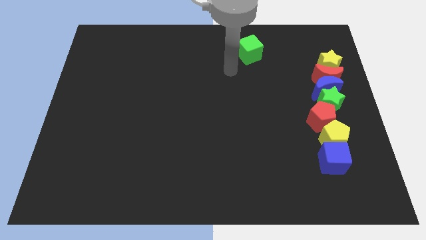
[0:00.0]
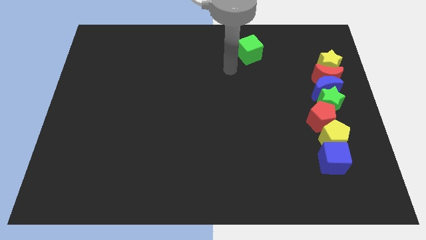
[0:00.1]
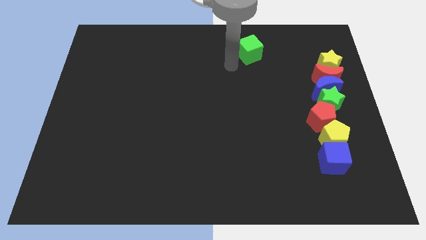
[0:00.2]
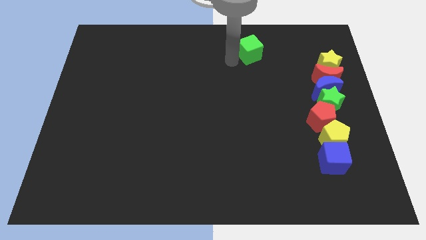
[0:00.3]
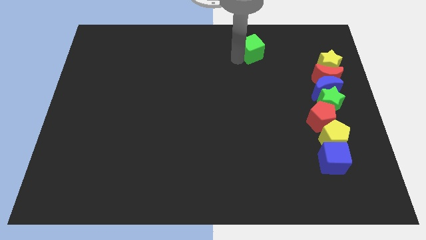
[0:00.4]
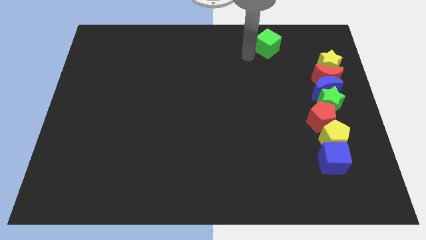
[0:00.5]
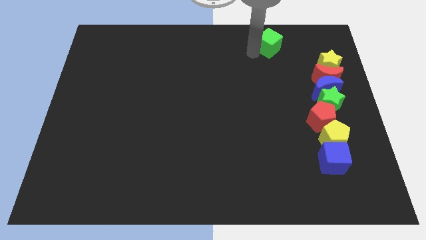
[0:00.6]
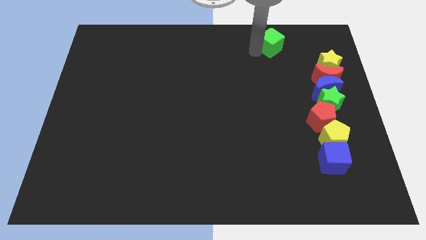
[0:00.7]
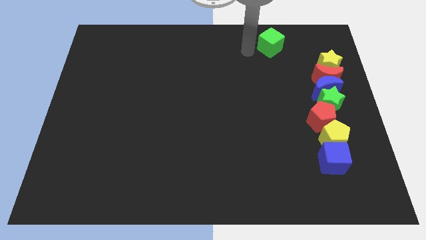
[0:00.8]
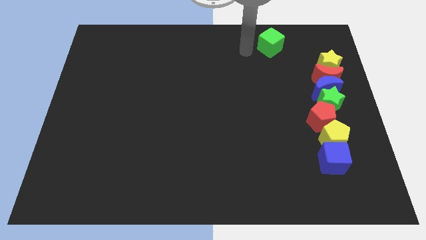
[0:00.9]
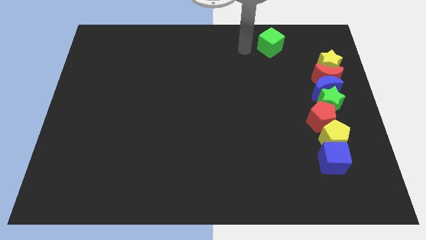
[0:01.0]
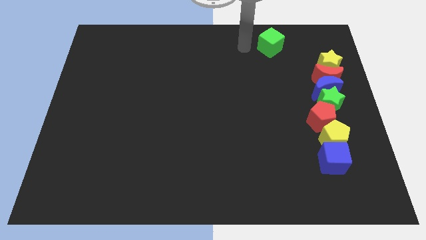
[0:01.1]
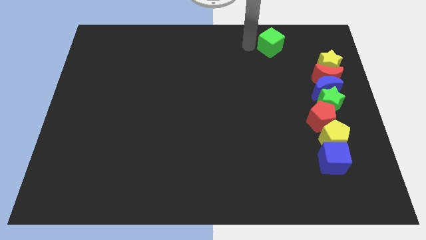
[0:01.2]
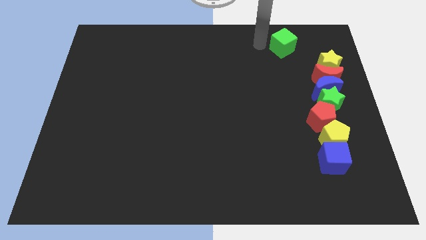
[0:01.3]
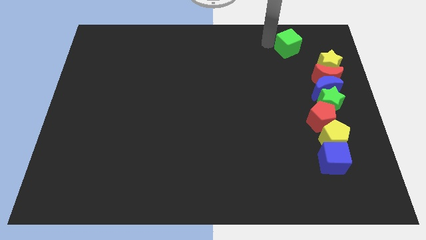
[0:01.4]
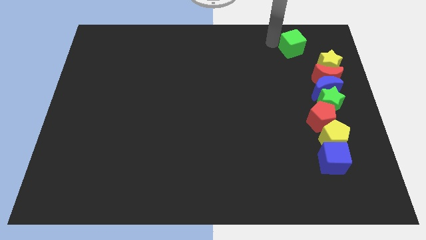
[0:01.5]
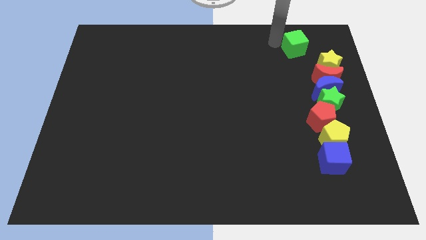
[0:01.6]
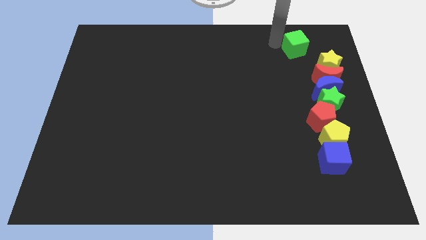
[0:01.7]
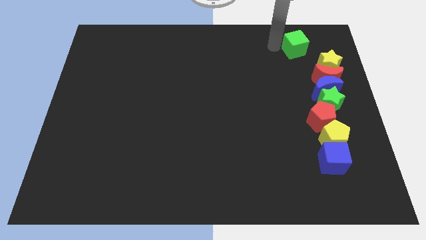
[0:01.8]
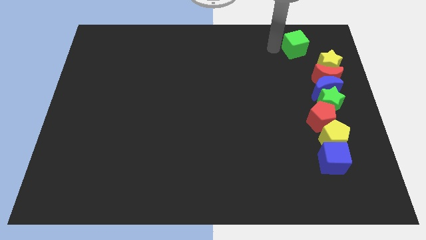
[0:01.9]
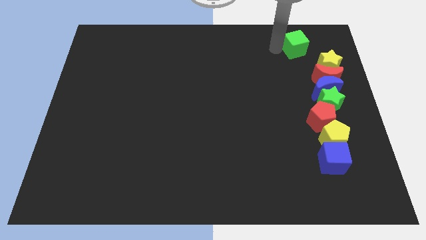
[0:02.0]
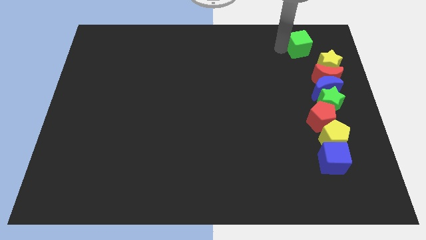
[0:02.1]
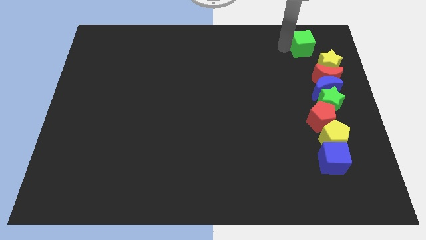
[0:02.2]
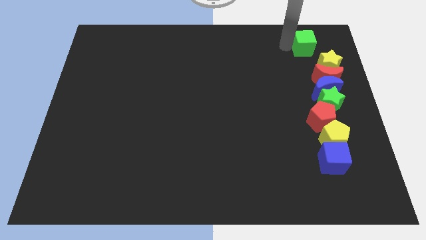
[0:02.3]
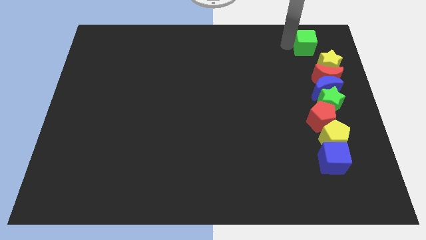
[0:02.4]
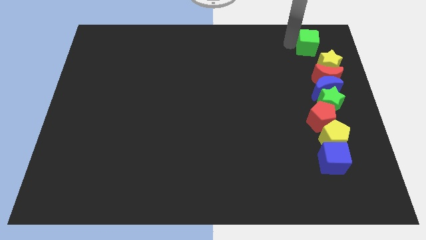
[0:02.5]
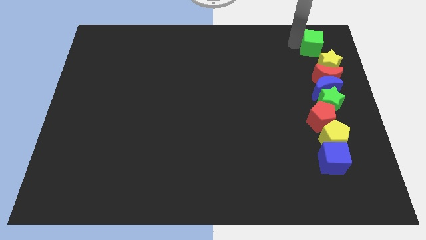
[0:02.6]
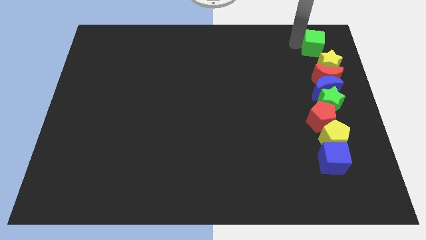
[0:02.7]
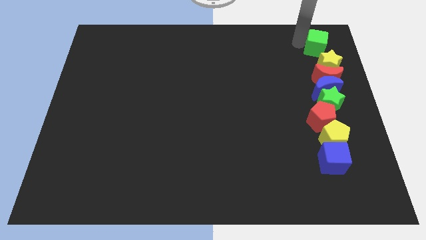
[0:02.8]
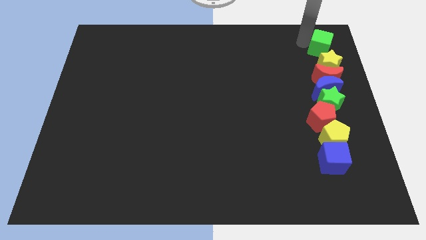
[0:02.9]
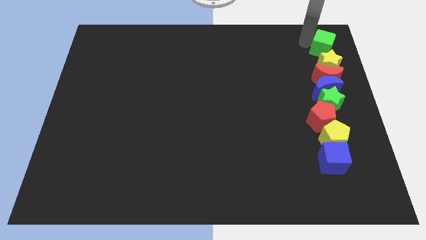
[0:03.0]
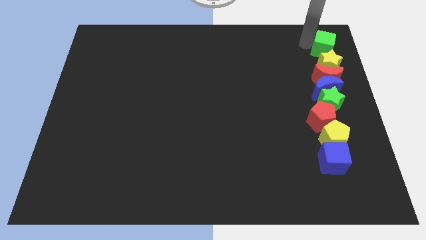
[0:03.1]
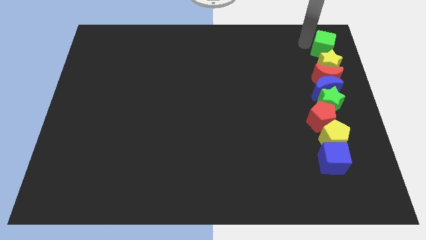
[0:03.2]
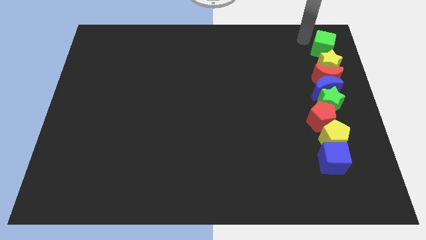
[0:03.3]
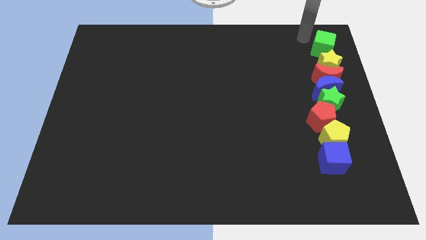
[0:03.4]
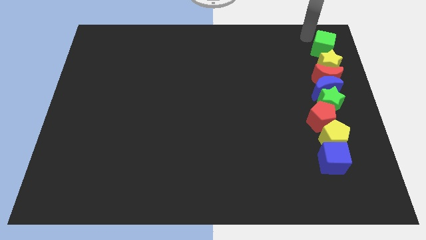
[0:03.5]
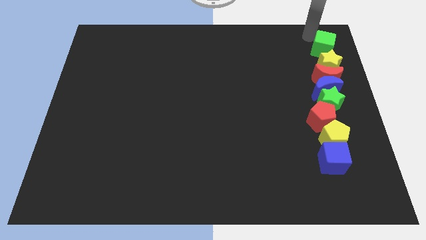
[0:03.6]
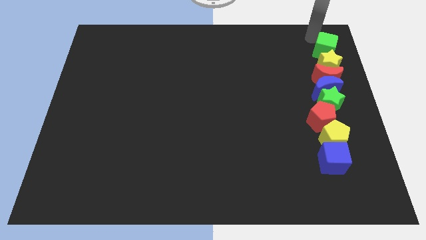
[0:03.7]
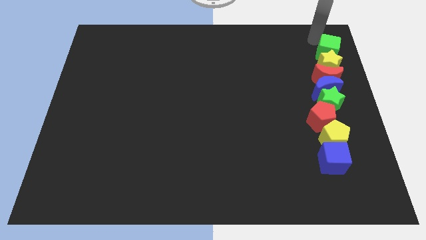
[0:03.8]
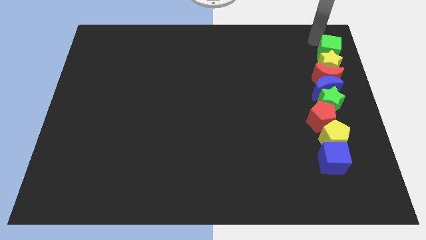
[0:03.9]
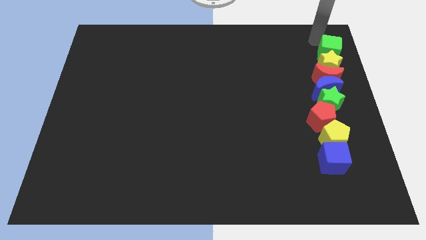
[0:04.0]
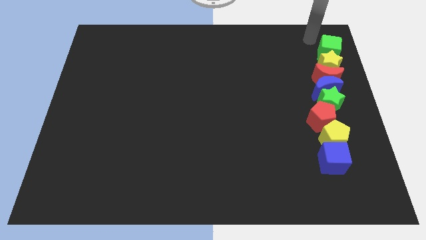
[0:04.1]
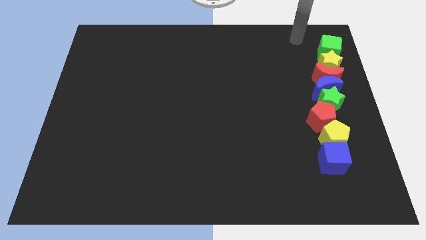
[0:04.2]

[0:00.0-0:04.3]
move the green cube above to the yellow star

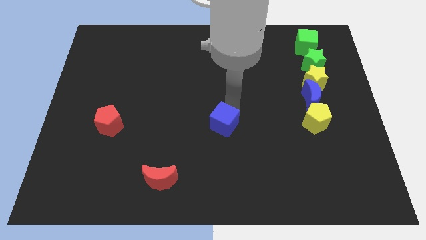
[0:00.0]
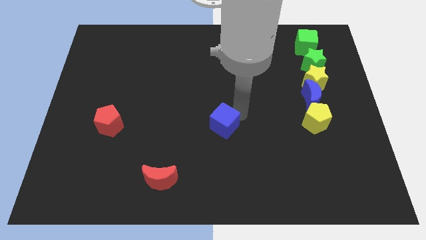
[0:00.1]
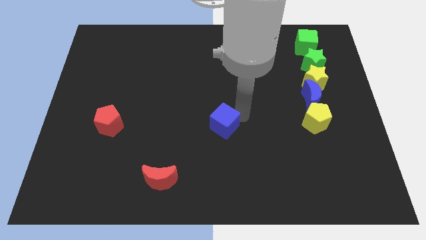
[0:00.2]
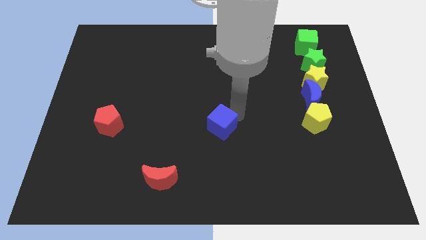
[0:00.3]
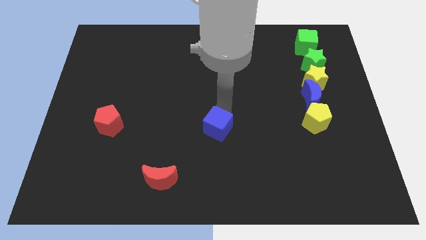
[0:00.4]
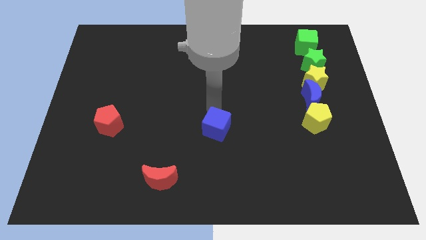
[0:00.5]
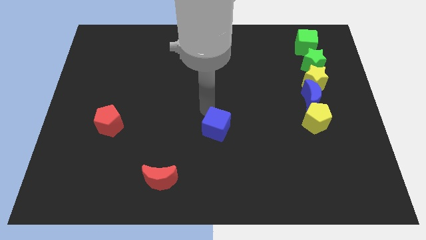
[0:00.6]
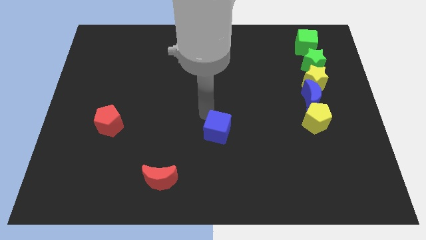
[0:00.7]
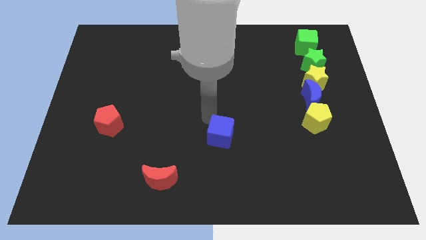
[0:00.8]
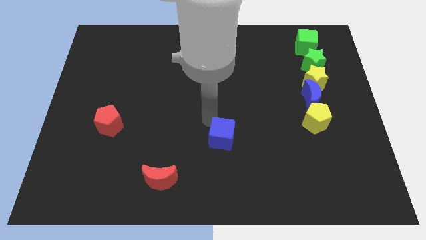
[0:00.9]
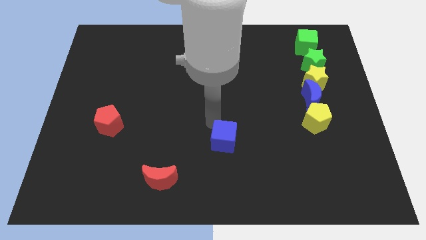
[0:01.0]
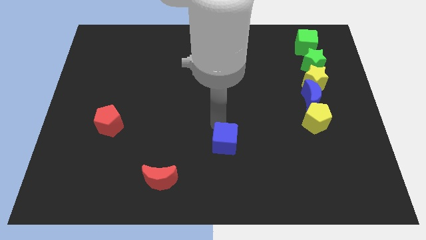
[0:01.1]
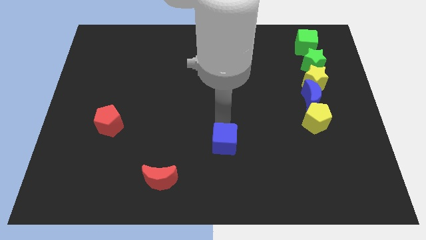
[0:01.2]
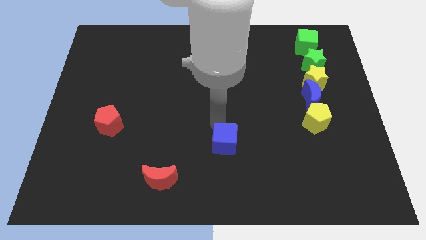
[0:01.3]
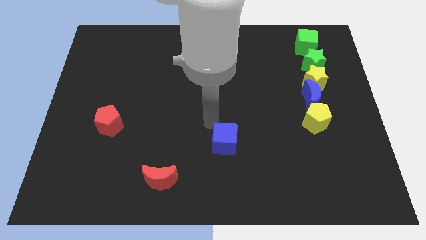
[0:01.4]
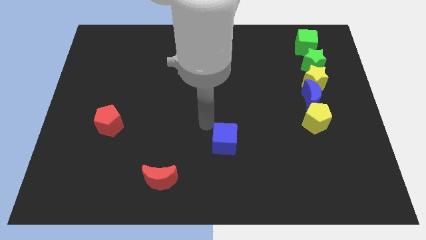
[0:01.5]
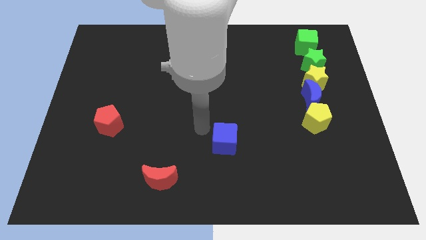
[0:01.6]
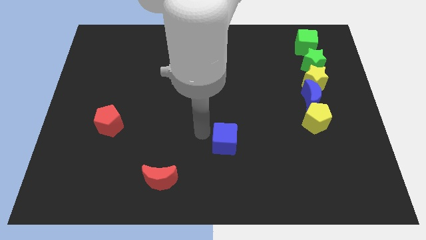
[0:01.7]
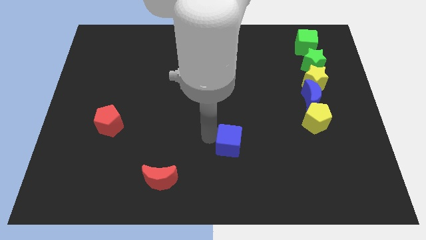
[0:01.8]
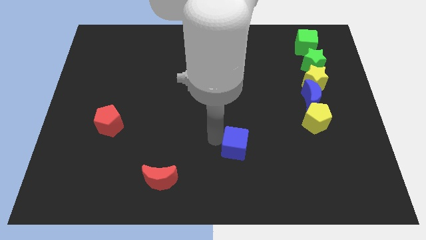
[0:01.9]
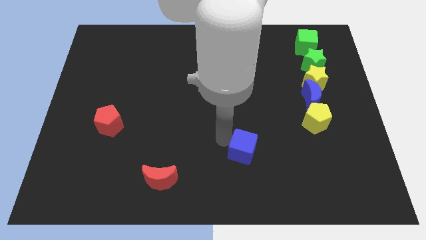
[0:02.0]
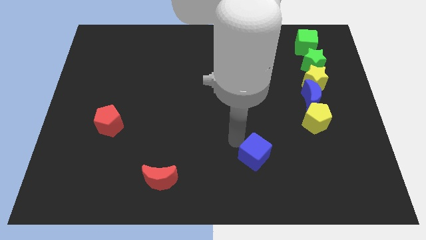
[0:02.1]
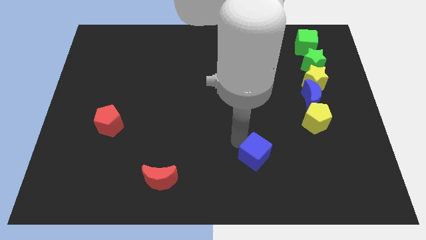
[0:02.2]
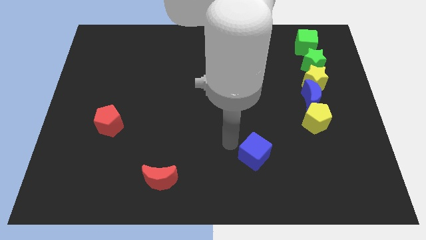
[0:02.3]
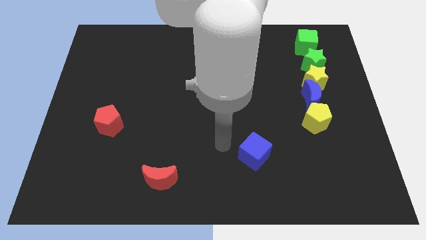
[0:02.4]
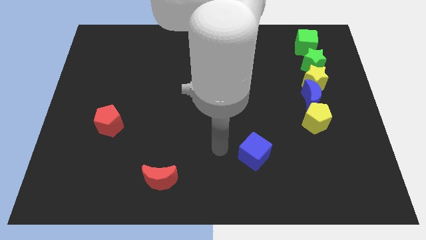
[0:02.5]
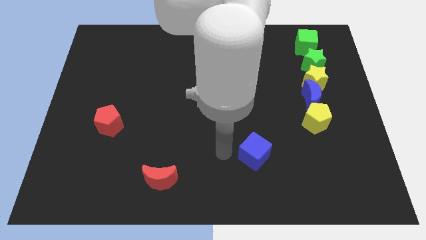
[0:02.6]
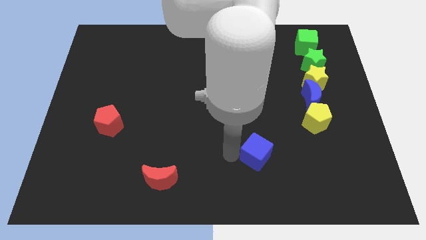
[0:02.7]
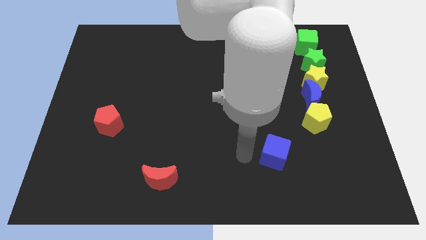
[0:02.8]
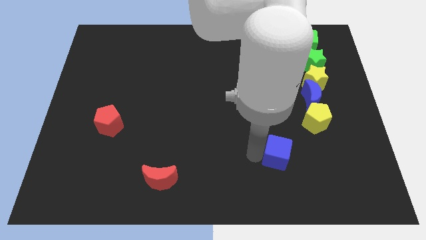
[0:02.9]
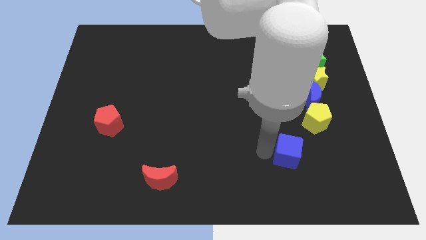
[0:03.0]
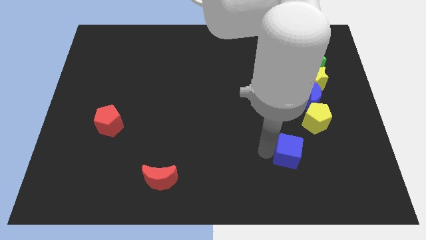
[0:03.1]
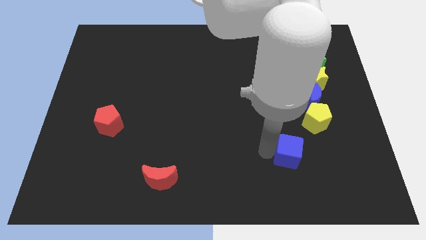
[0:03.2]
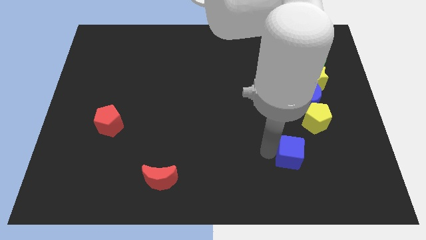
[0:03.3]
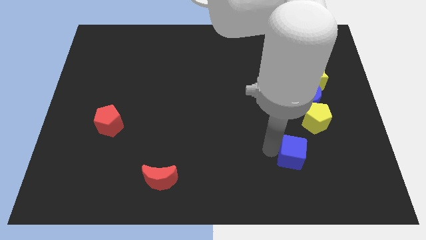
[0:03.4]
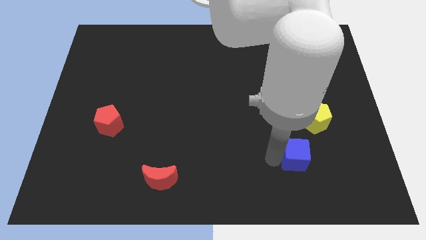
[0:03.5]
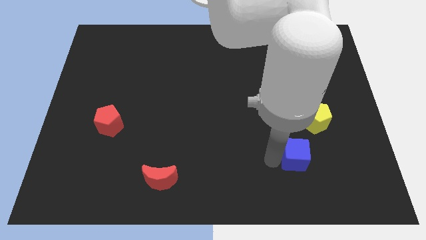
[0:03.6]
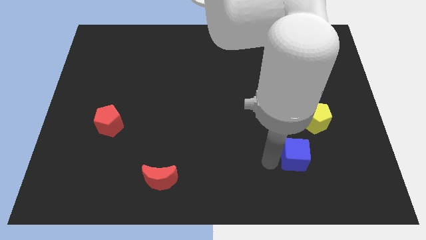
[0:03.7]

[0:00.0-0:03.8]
put the blue cube at the bottom left side of the yellow pentagon

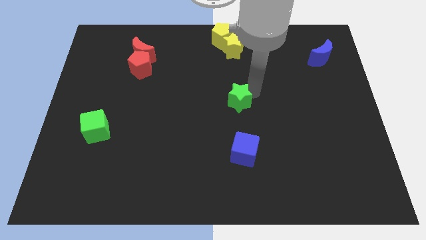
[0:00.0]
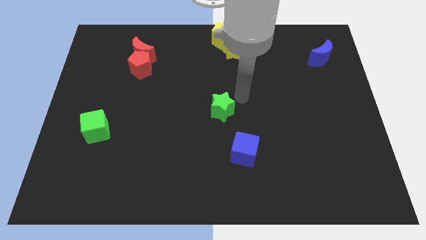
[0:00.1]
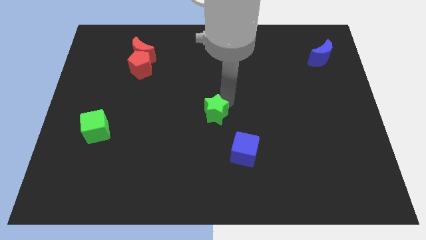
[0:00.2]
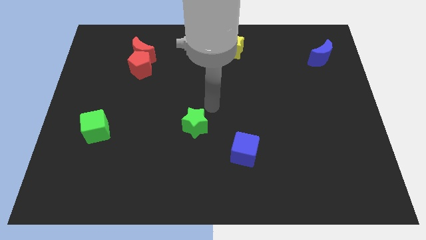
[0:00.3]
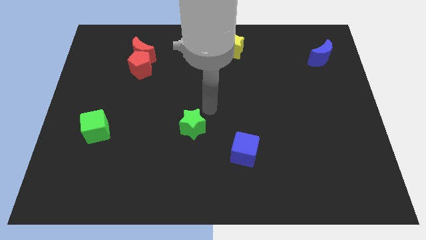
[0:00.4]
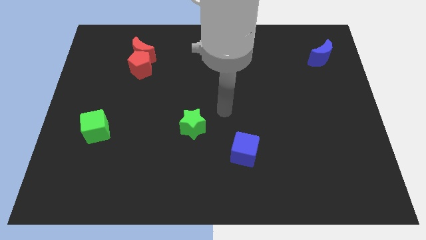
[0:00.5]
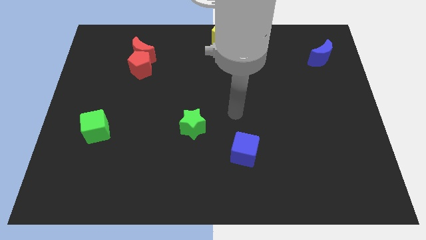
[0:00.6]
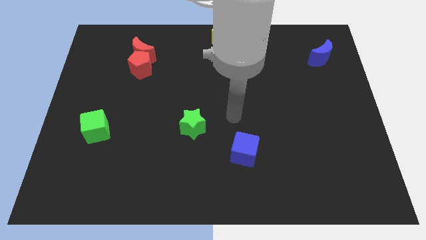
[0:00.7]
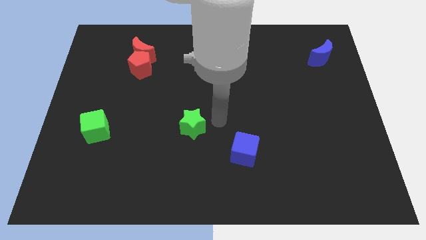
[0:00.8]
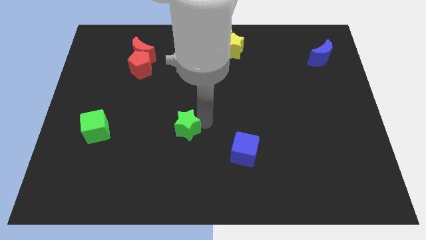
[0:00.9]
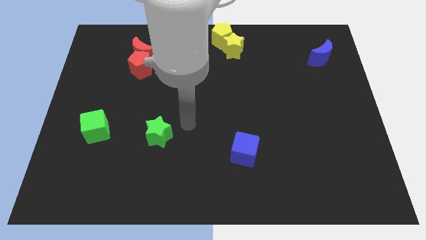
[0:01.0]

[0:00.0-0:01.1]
place green star to the right of green cube
